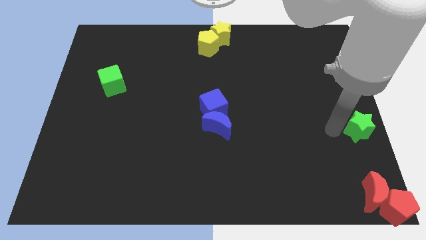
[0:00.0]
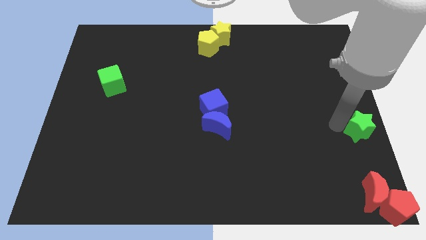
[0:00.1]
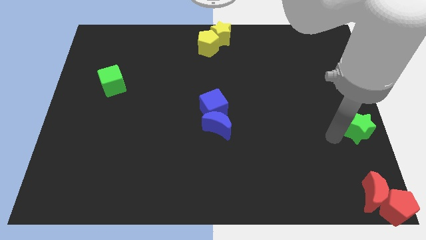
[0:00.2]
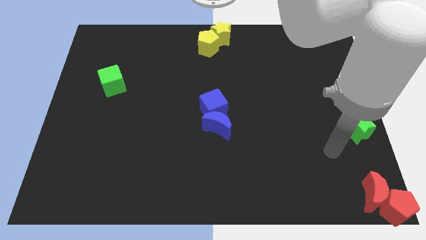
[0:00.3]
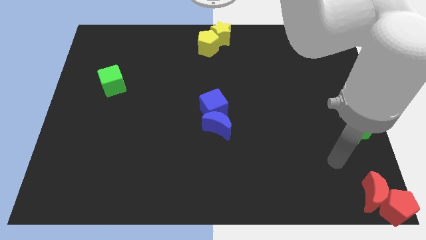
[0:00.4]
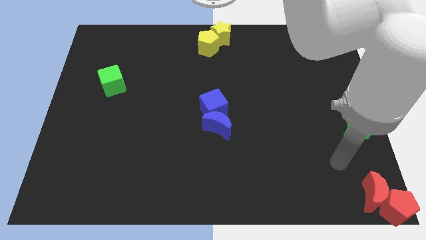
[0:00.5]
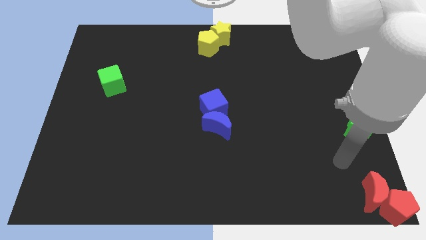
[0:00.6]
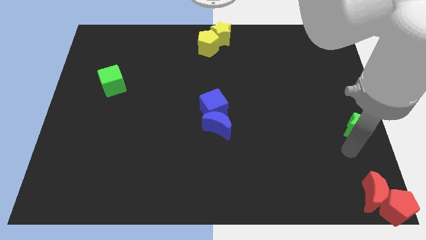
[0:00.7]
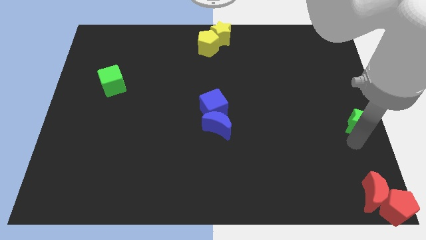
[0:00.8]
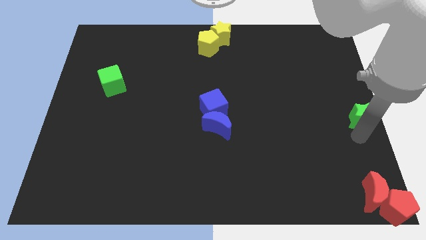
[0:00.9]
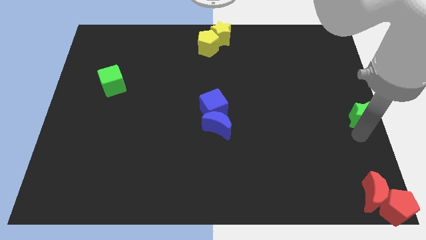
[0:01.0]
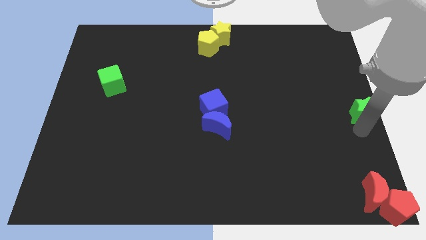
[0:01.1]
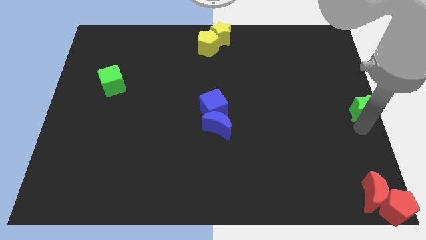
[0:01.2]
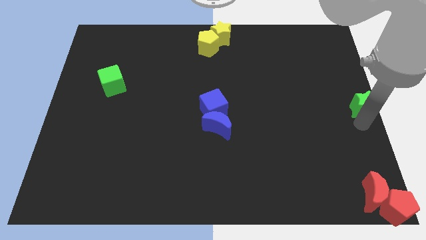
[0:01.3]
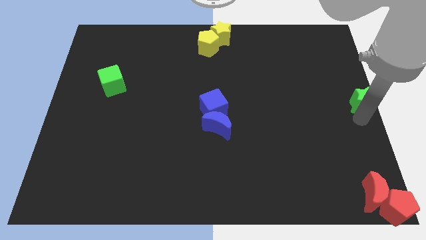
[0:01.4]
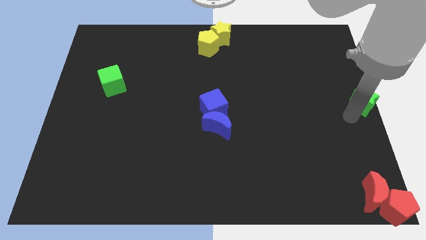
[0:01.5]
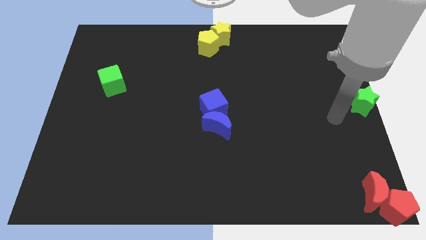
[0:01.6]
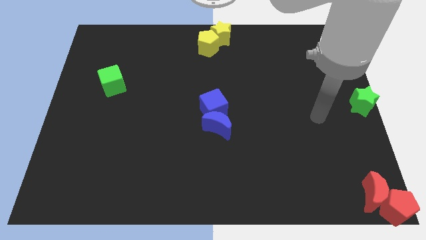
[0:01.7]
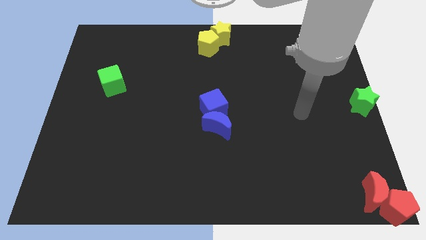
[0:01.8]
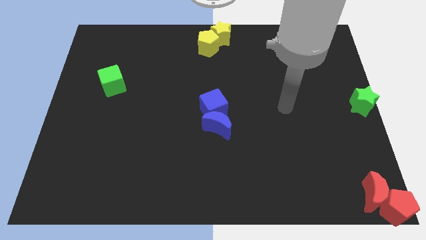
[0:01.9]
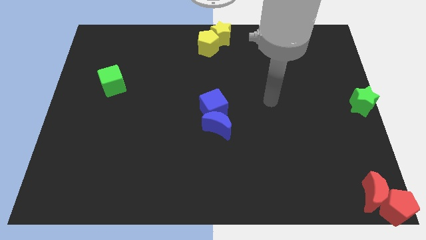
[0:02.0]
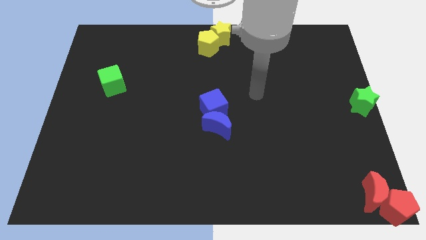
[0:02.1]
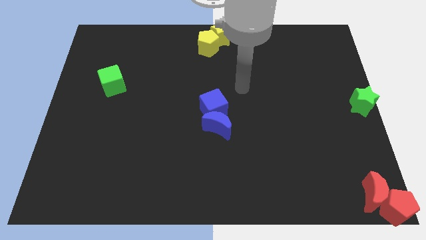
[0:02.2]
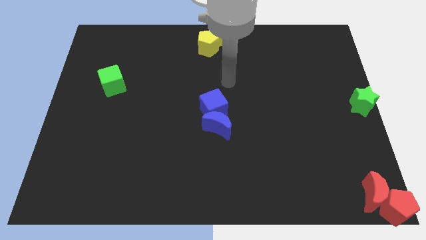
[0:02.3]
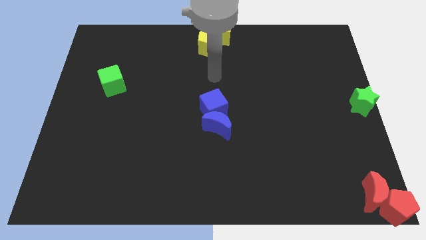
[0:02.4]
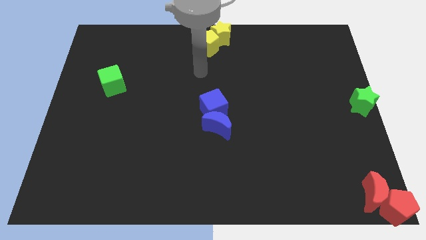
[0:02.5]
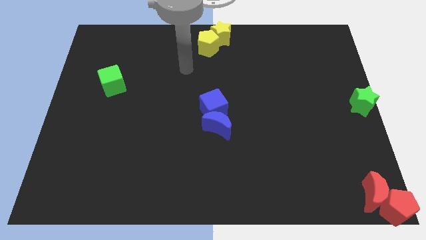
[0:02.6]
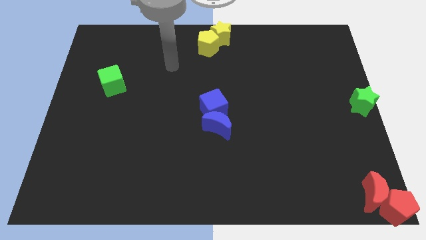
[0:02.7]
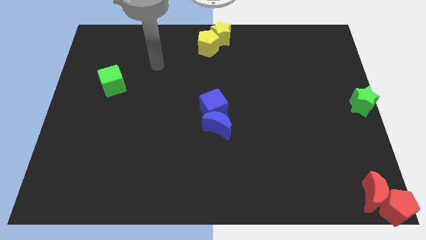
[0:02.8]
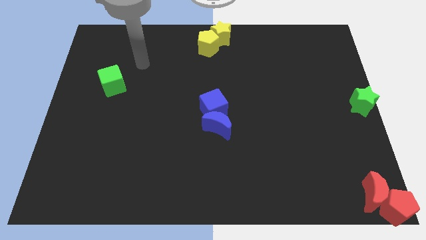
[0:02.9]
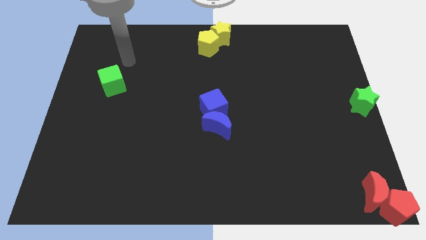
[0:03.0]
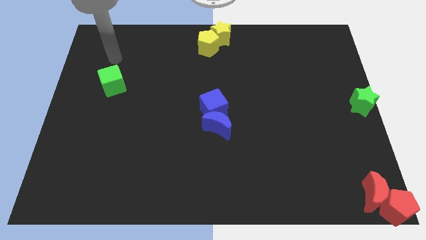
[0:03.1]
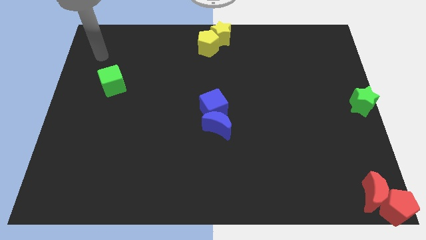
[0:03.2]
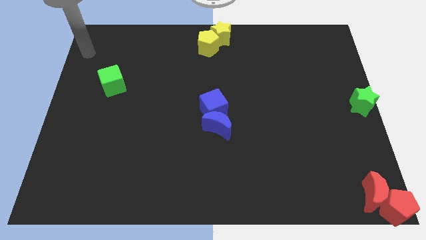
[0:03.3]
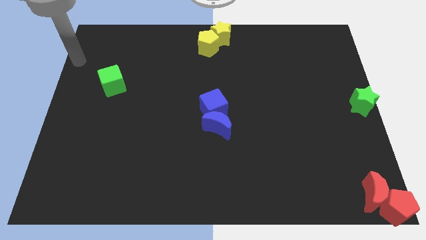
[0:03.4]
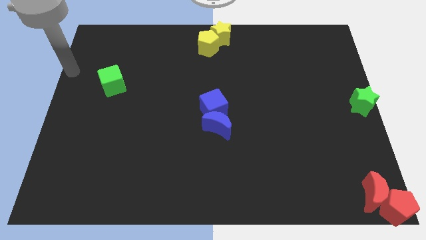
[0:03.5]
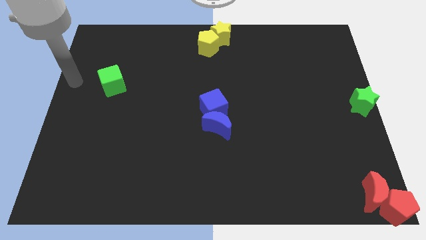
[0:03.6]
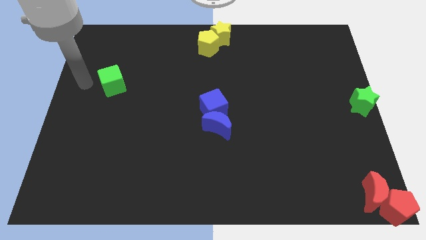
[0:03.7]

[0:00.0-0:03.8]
move the arm to the left side of the green cube

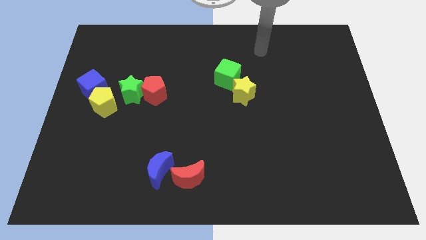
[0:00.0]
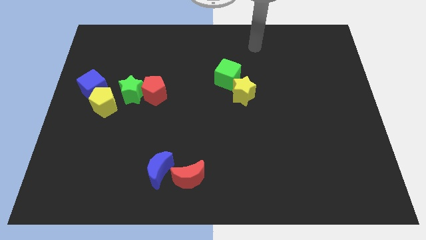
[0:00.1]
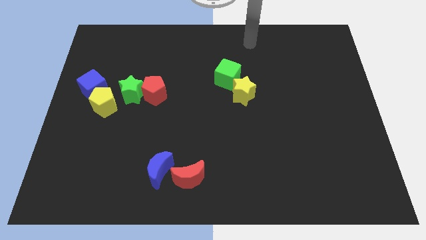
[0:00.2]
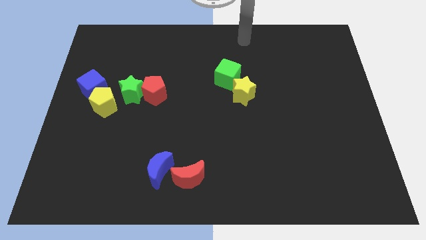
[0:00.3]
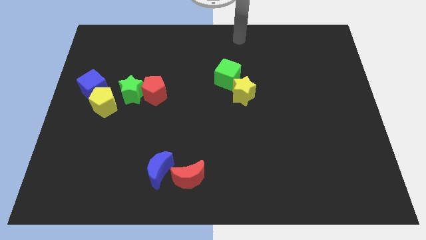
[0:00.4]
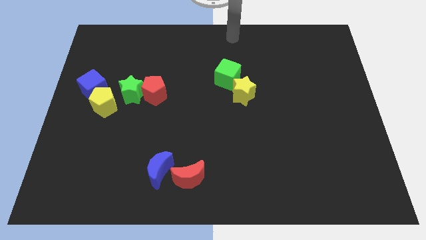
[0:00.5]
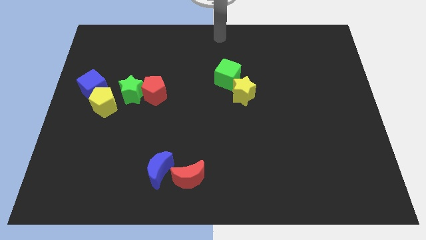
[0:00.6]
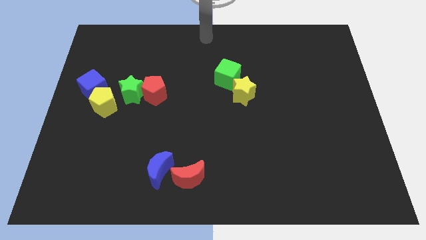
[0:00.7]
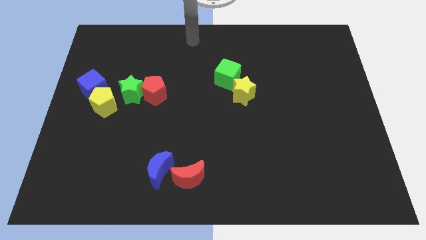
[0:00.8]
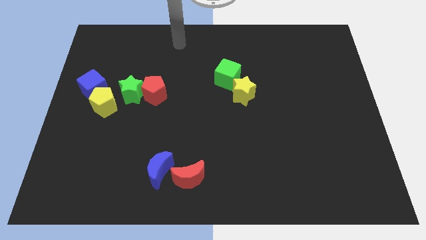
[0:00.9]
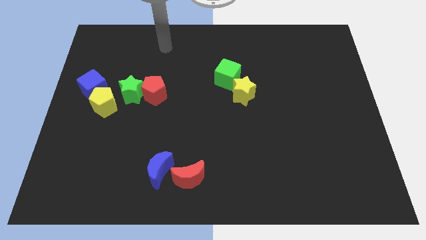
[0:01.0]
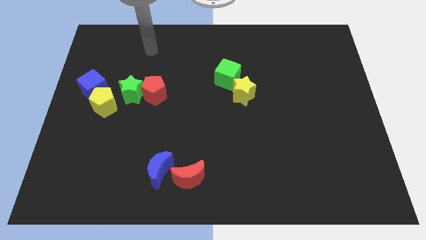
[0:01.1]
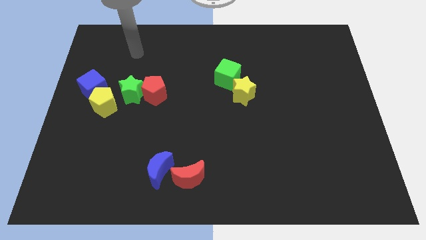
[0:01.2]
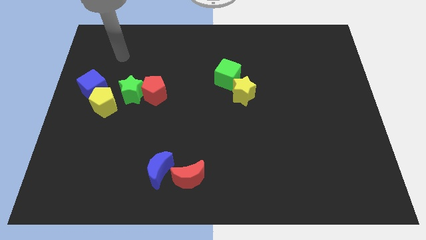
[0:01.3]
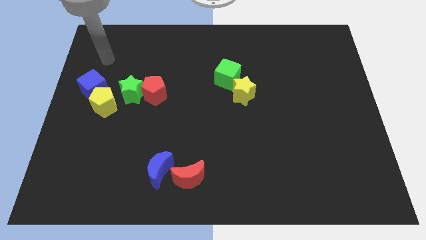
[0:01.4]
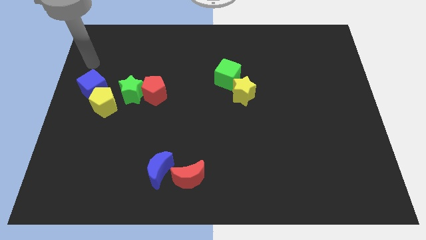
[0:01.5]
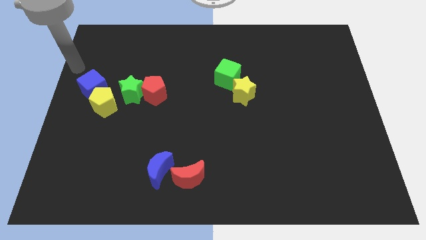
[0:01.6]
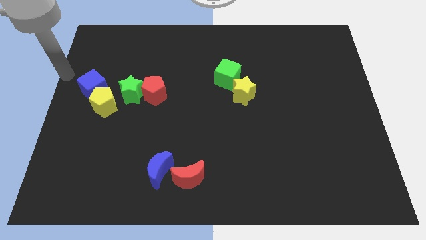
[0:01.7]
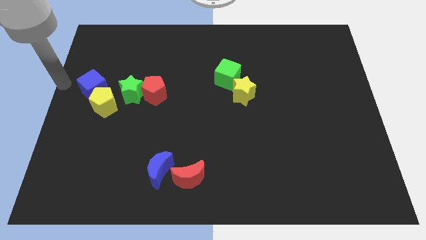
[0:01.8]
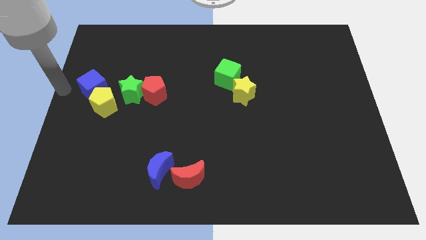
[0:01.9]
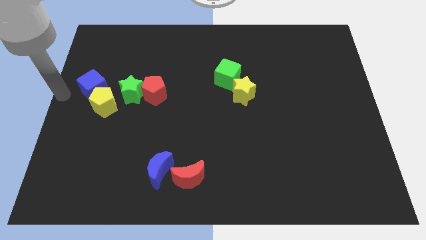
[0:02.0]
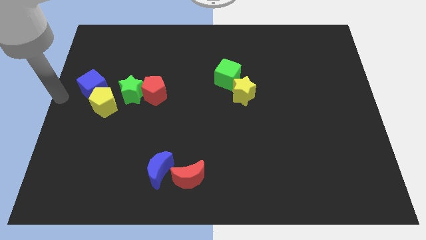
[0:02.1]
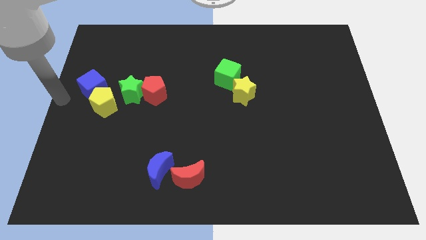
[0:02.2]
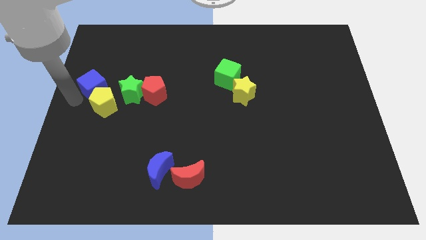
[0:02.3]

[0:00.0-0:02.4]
move your arm to the left center of the board

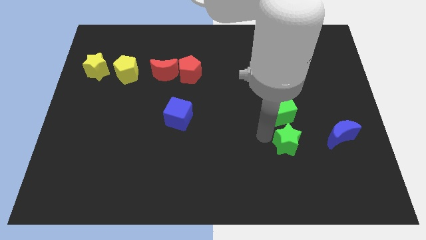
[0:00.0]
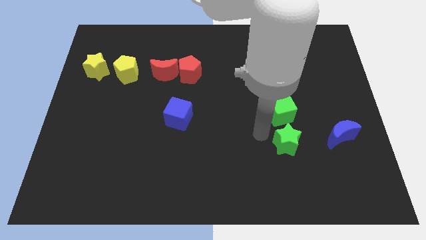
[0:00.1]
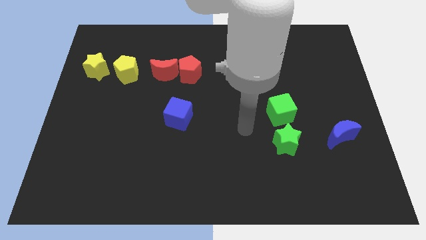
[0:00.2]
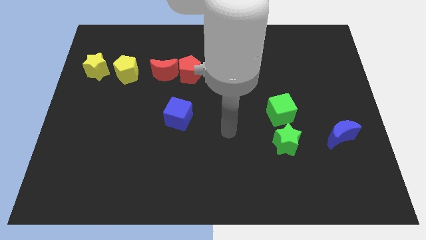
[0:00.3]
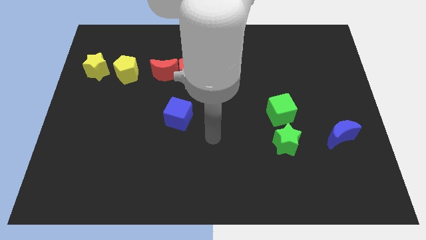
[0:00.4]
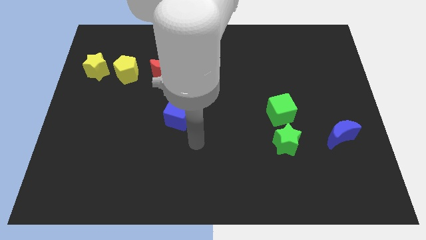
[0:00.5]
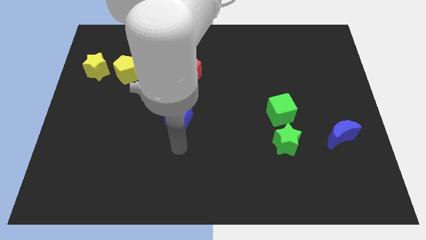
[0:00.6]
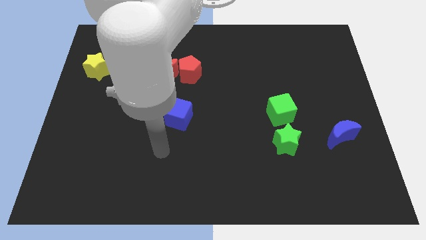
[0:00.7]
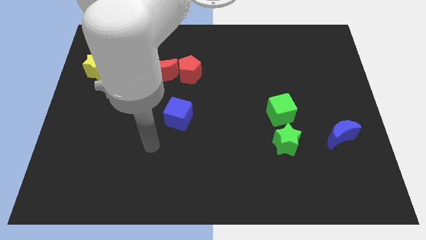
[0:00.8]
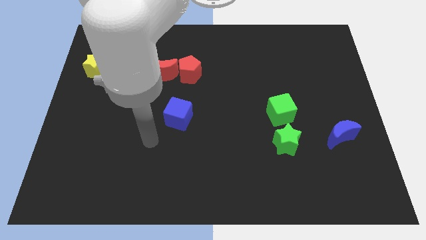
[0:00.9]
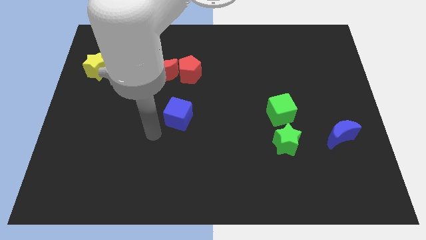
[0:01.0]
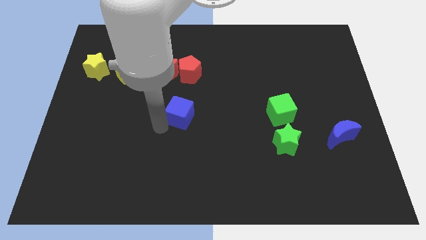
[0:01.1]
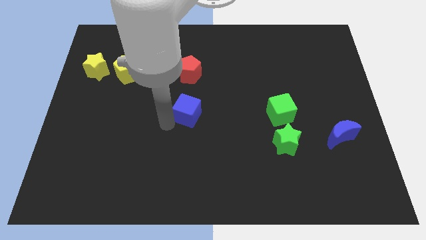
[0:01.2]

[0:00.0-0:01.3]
touch the blue cube with your arm

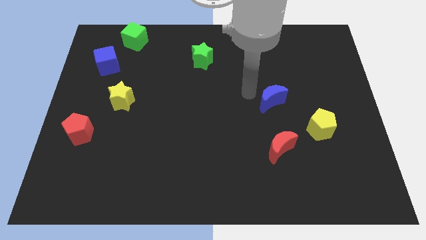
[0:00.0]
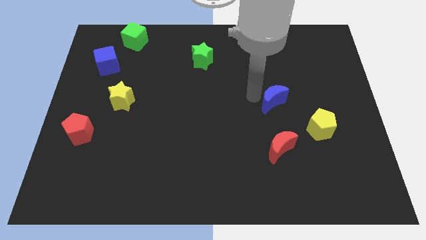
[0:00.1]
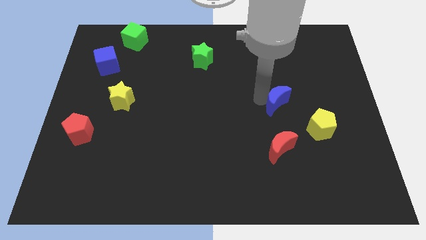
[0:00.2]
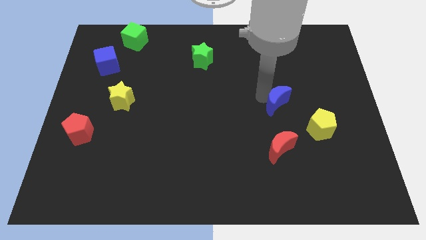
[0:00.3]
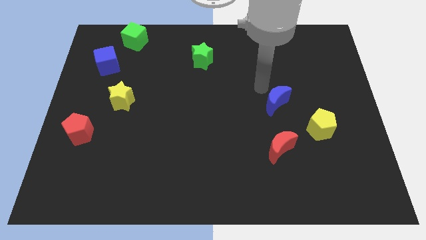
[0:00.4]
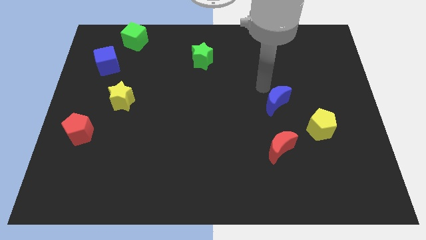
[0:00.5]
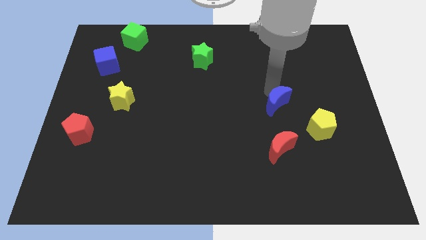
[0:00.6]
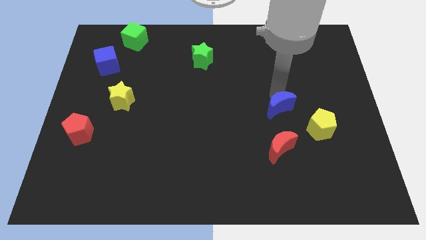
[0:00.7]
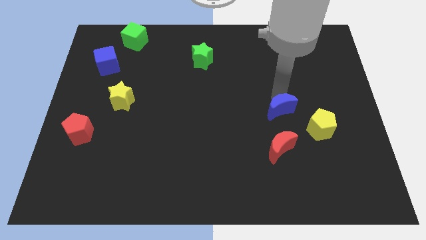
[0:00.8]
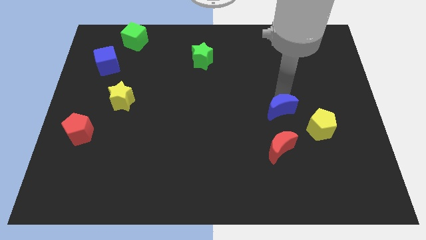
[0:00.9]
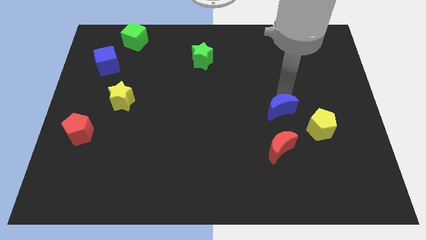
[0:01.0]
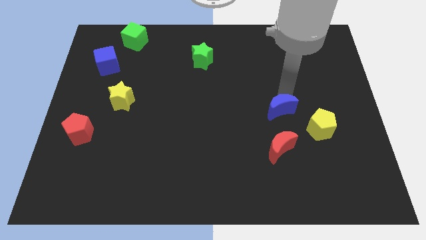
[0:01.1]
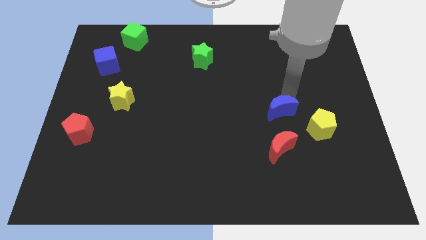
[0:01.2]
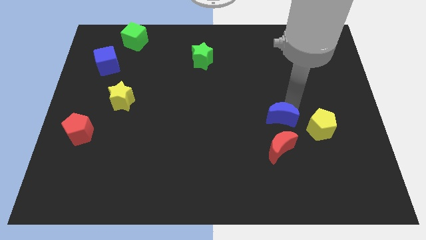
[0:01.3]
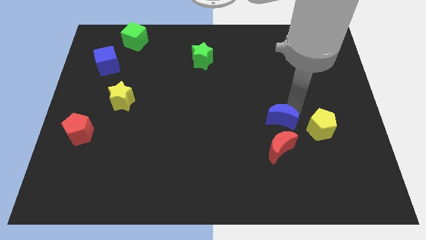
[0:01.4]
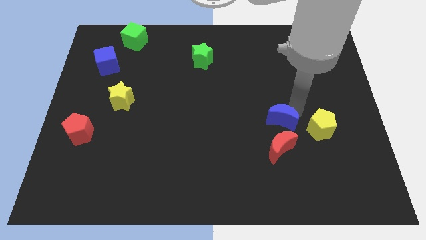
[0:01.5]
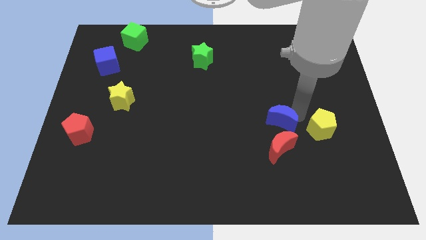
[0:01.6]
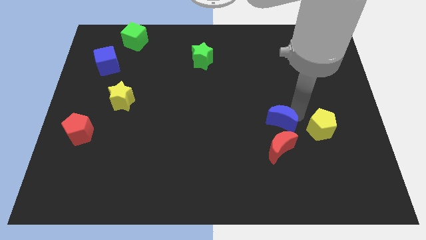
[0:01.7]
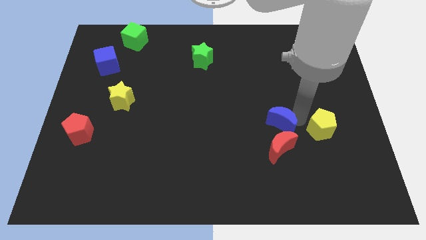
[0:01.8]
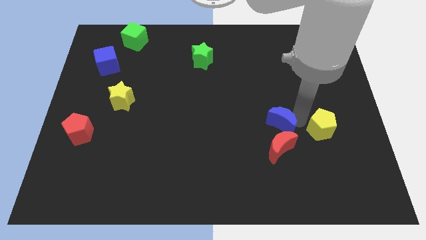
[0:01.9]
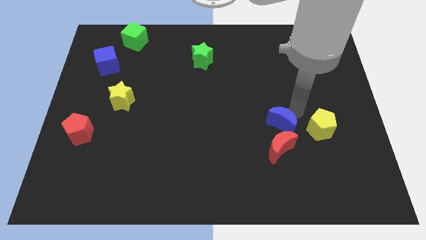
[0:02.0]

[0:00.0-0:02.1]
push blue moon towards red moon
